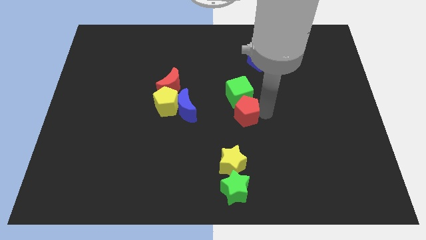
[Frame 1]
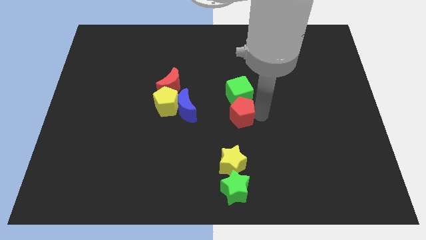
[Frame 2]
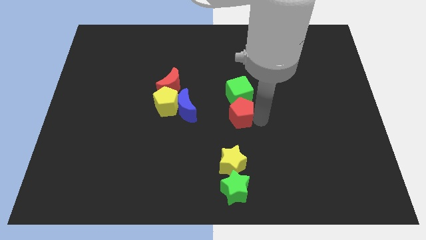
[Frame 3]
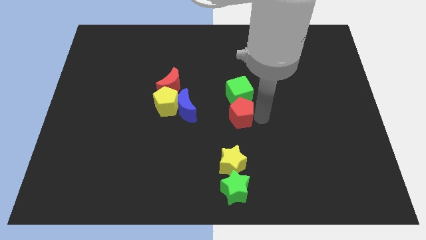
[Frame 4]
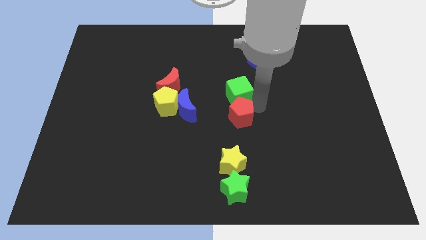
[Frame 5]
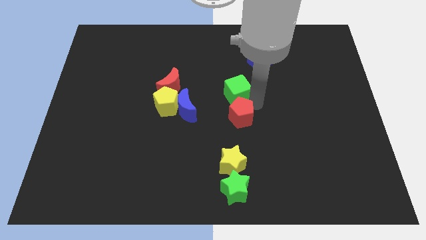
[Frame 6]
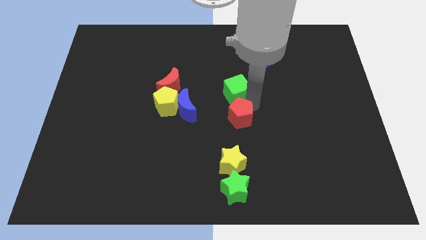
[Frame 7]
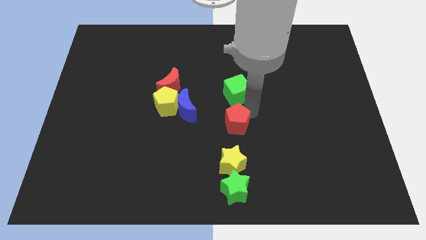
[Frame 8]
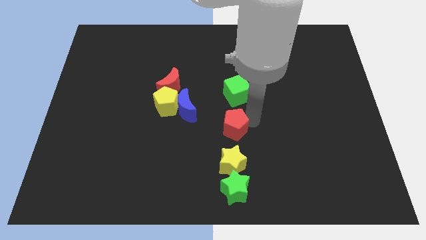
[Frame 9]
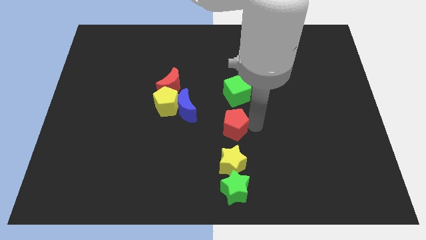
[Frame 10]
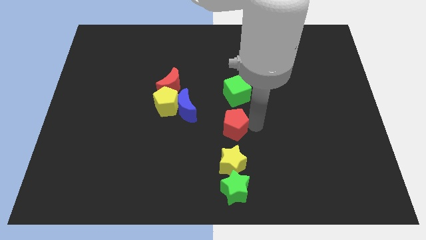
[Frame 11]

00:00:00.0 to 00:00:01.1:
separate red pentagon from green cube

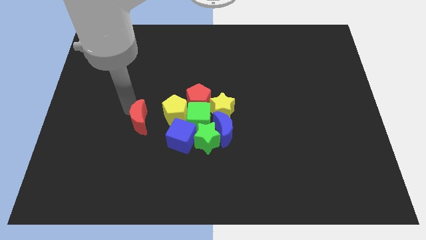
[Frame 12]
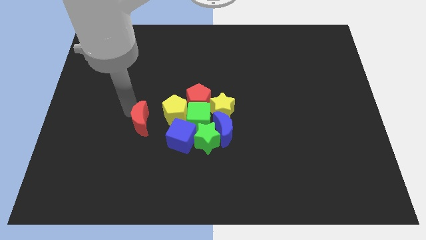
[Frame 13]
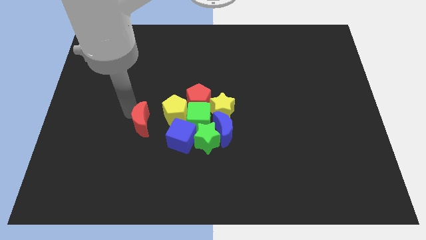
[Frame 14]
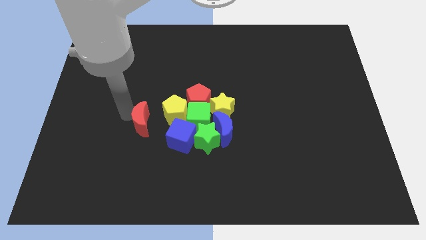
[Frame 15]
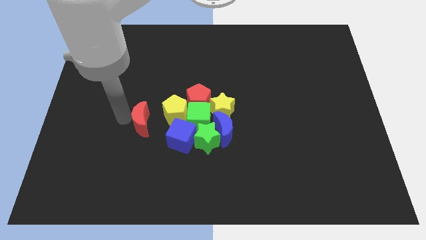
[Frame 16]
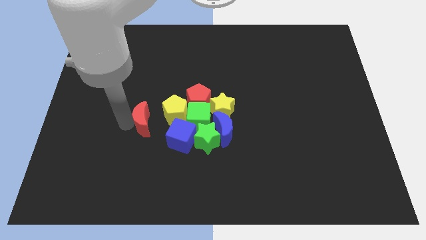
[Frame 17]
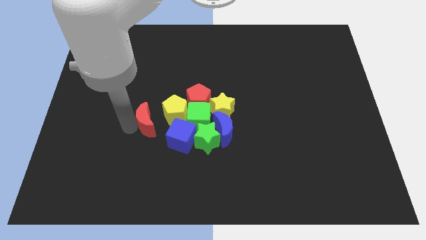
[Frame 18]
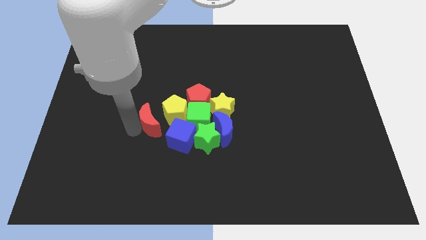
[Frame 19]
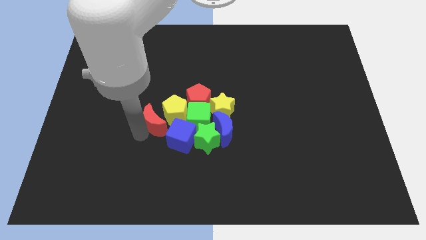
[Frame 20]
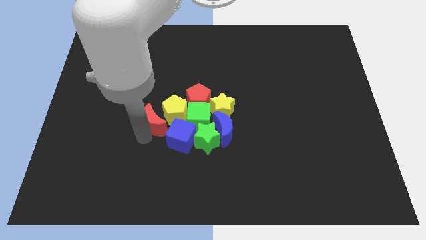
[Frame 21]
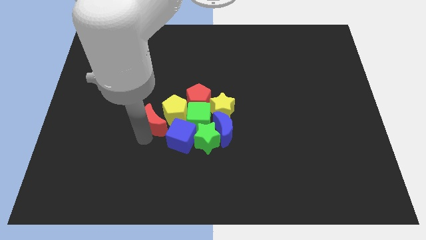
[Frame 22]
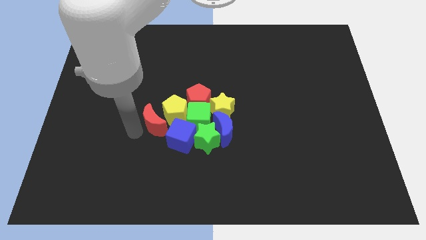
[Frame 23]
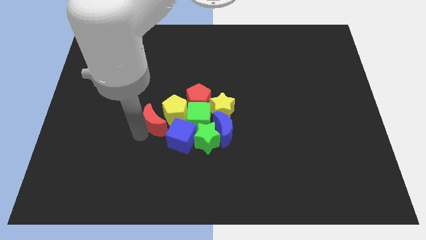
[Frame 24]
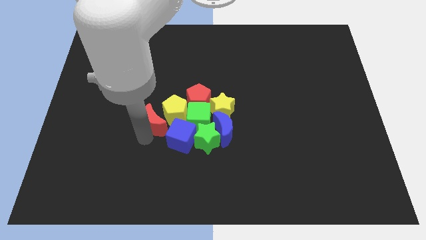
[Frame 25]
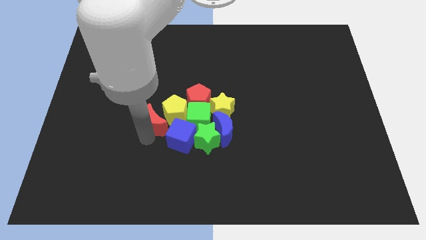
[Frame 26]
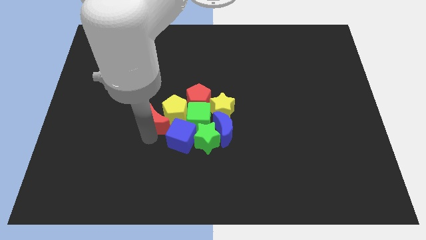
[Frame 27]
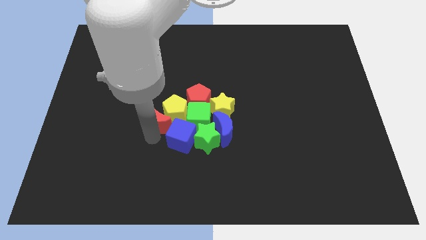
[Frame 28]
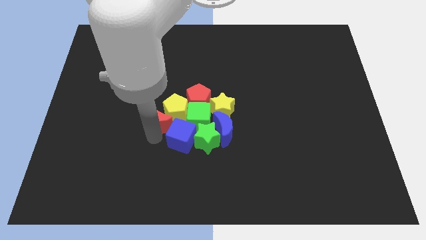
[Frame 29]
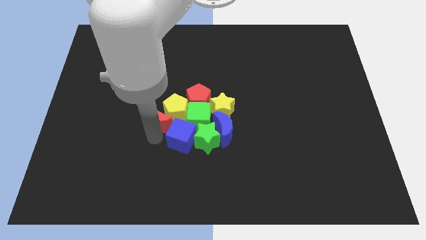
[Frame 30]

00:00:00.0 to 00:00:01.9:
push the red moon close to the yellow pentagon

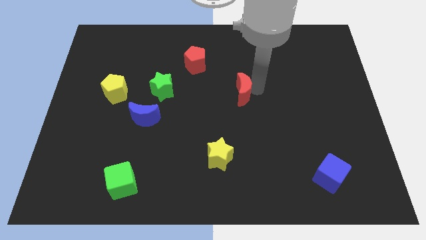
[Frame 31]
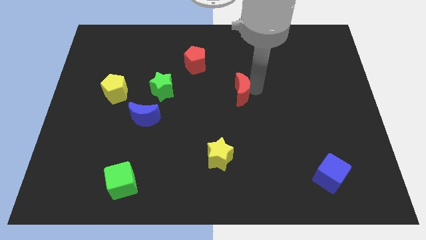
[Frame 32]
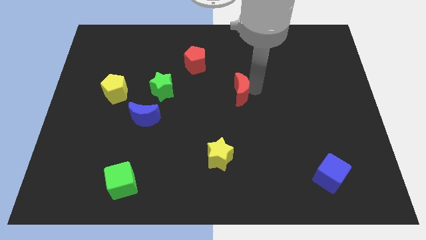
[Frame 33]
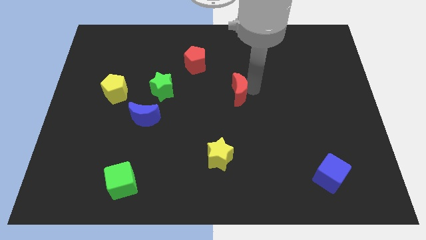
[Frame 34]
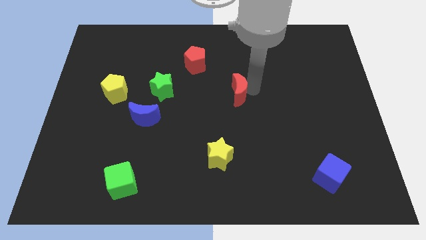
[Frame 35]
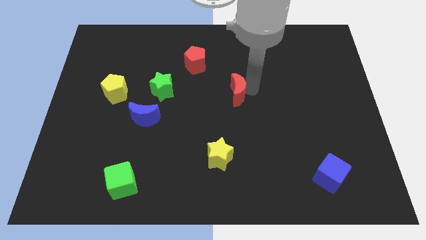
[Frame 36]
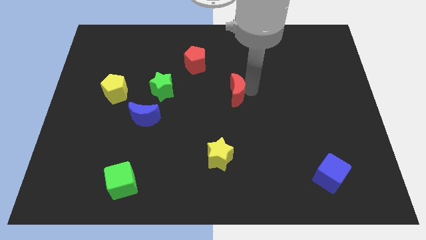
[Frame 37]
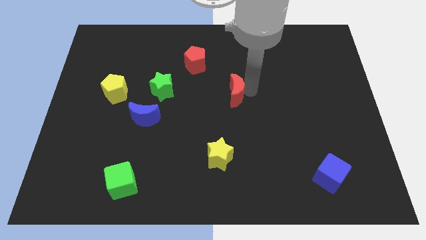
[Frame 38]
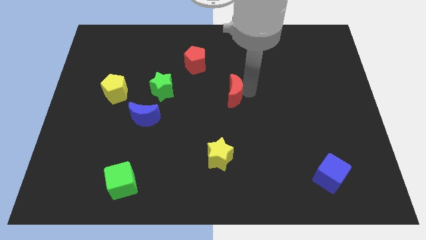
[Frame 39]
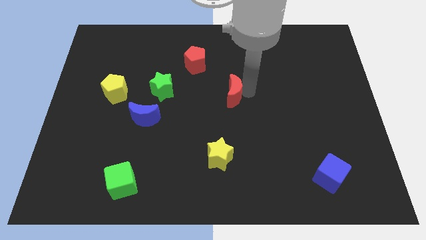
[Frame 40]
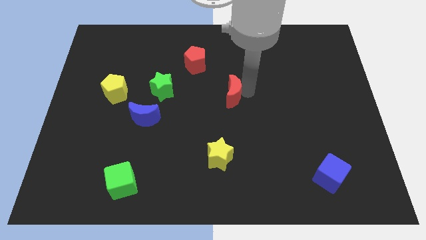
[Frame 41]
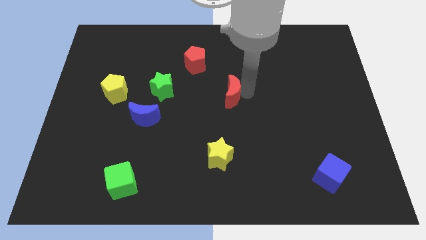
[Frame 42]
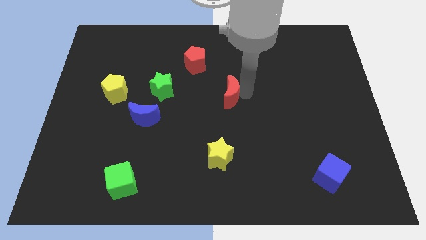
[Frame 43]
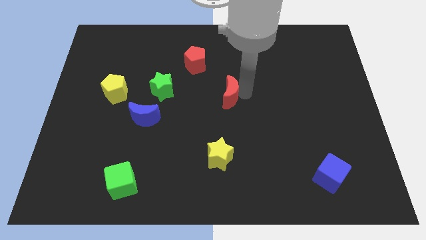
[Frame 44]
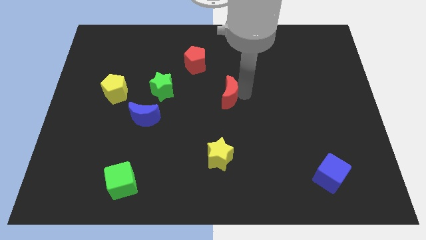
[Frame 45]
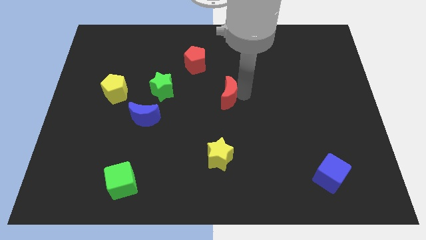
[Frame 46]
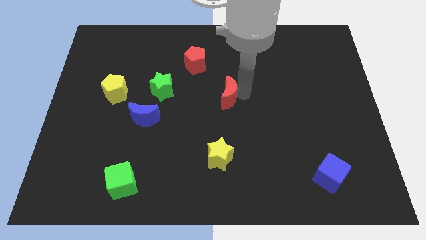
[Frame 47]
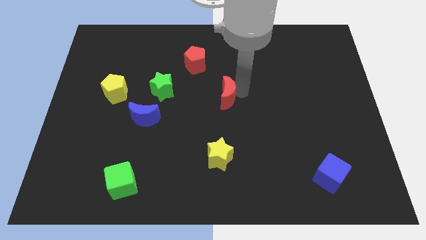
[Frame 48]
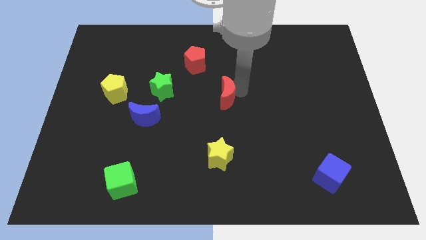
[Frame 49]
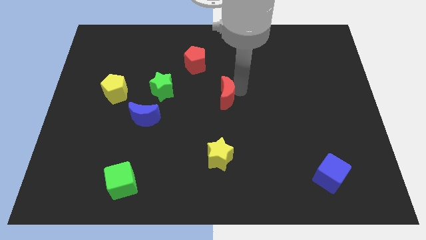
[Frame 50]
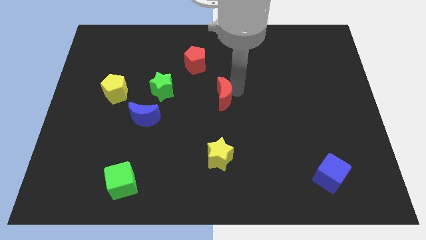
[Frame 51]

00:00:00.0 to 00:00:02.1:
slide the red crescent vertically above the yellow star

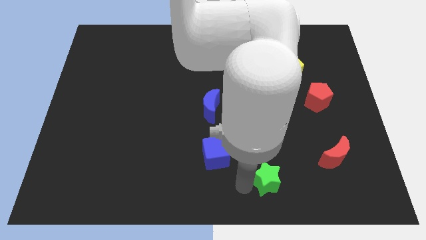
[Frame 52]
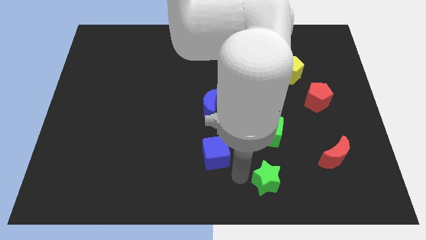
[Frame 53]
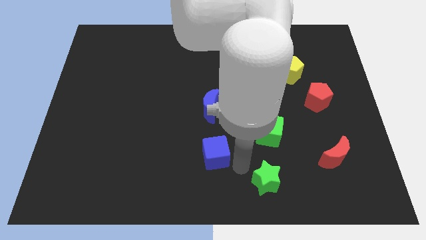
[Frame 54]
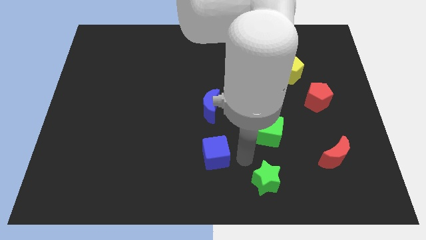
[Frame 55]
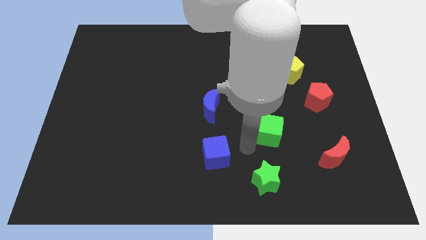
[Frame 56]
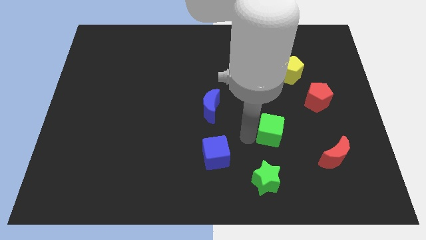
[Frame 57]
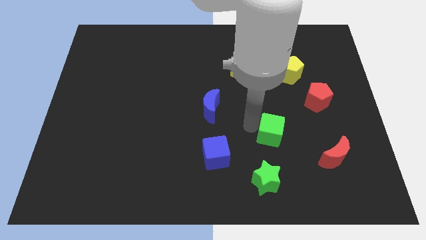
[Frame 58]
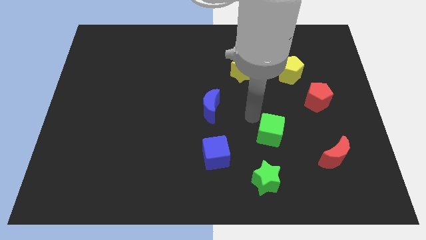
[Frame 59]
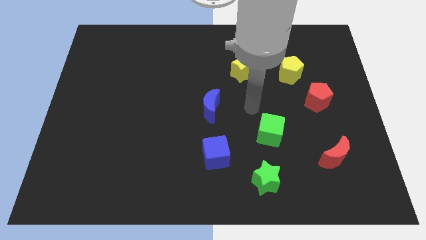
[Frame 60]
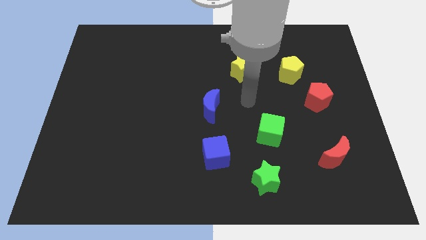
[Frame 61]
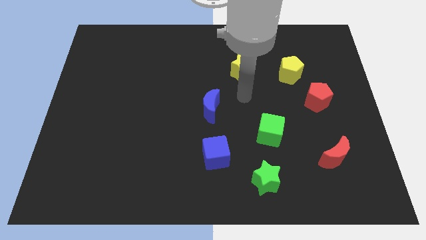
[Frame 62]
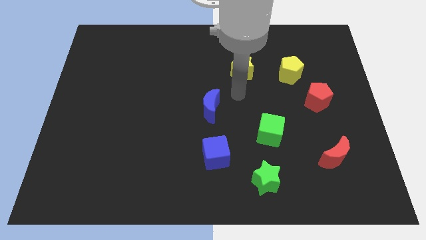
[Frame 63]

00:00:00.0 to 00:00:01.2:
place your arm to the bottom of the yellow star

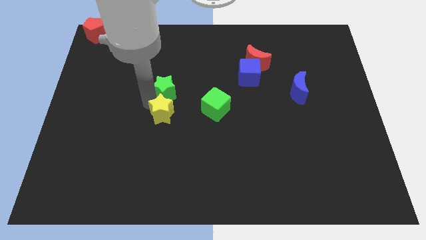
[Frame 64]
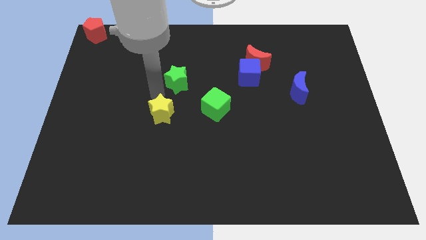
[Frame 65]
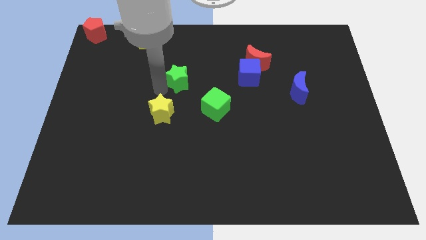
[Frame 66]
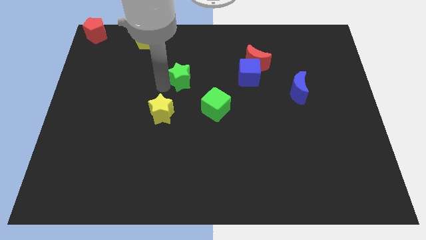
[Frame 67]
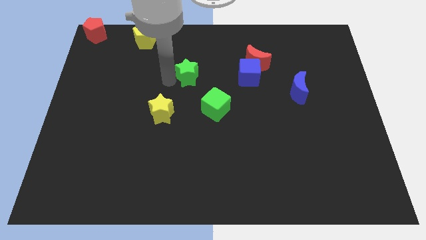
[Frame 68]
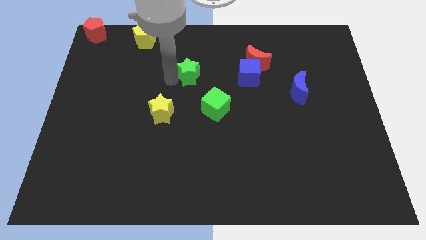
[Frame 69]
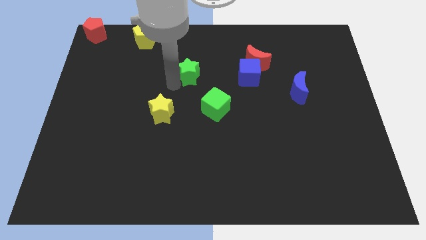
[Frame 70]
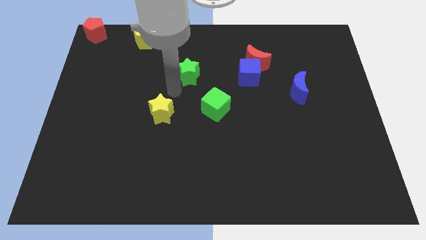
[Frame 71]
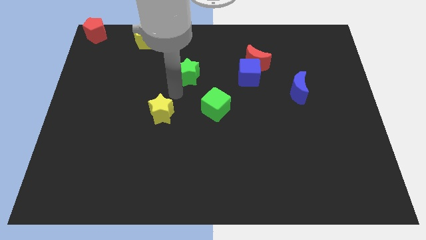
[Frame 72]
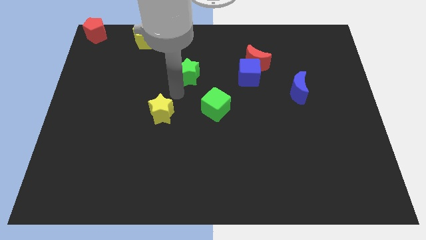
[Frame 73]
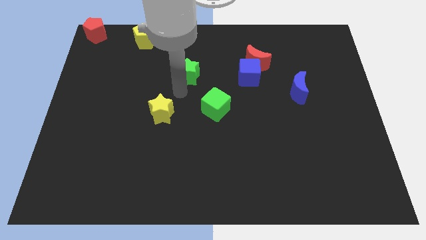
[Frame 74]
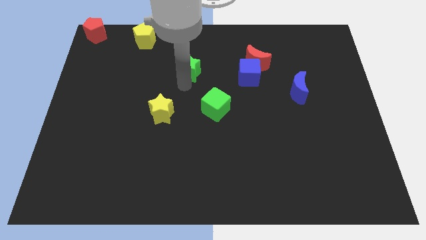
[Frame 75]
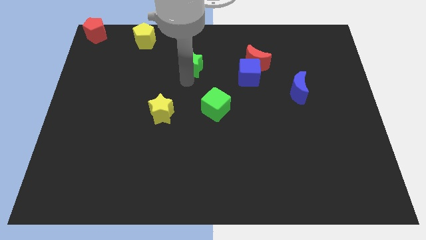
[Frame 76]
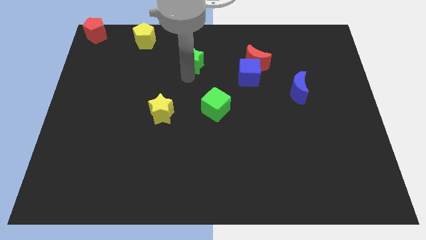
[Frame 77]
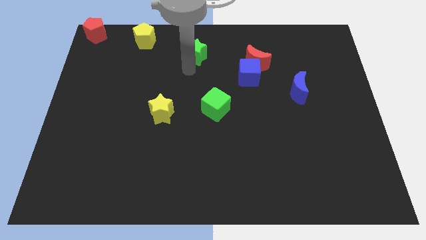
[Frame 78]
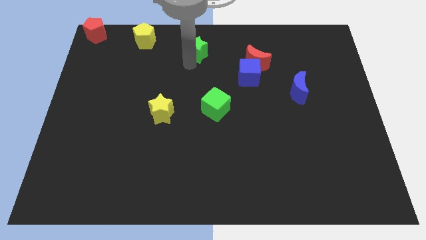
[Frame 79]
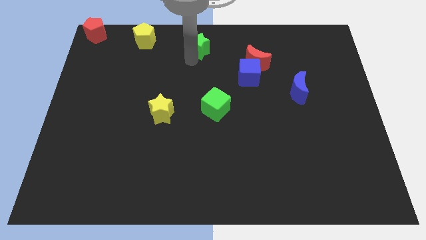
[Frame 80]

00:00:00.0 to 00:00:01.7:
move green star away from the yellow star

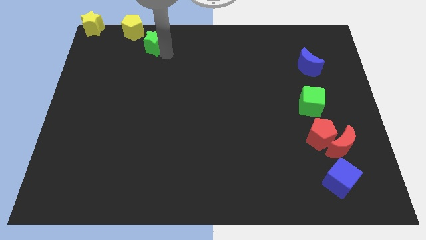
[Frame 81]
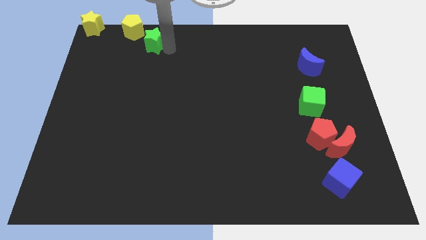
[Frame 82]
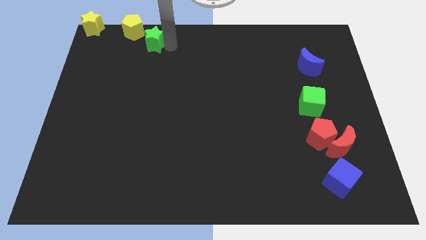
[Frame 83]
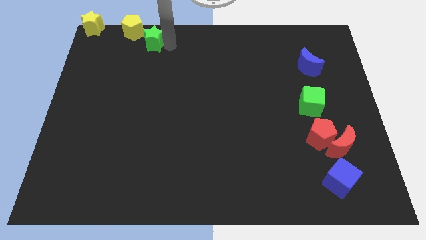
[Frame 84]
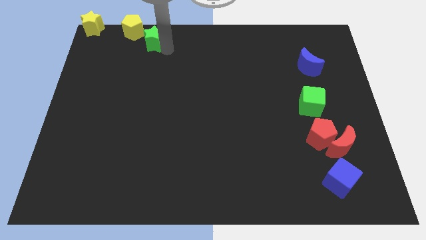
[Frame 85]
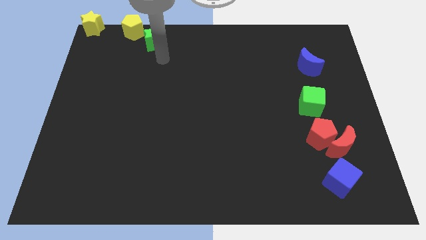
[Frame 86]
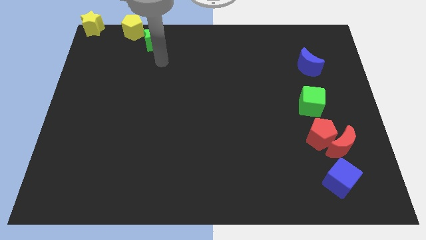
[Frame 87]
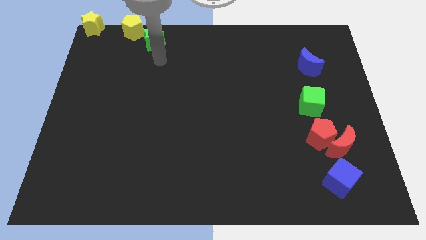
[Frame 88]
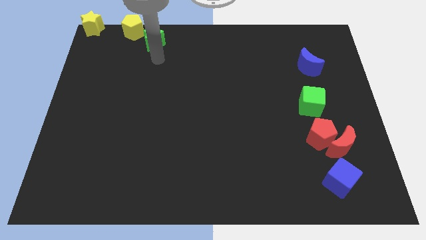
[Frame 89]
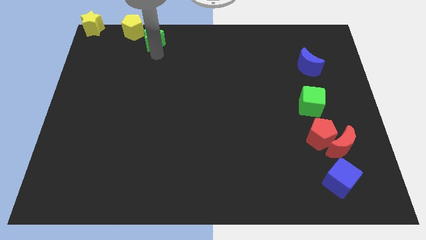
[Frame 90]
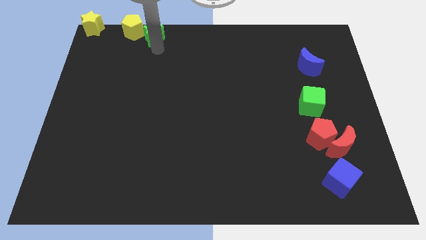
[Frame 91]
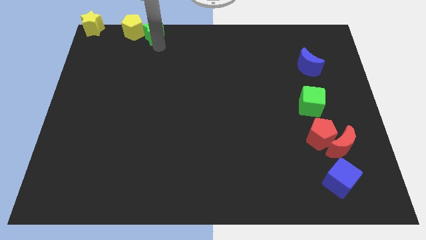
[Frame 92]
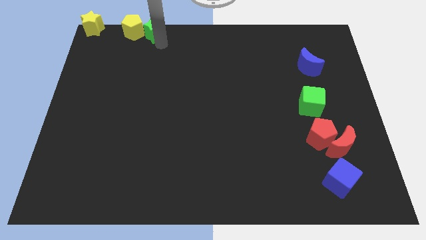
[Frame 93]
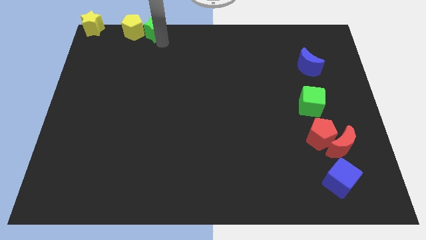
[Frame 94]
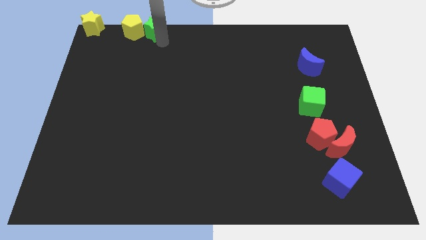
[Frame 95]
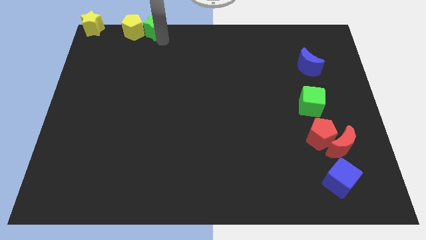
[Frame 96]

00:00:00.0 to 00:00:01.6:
move the green star to the right of the yellow pentagon
